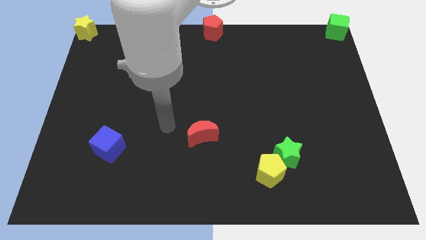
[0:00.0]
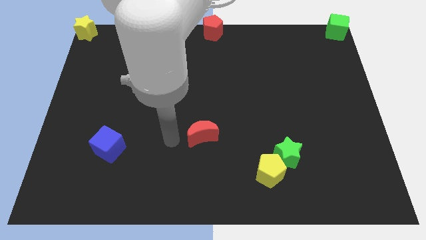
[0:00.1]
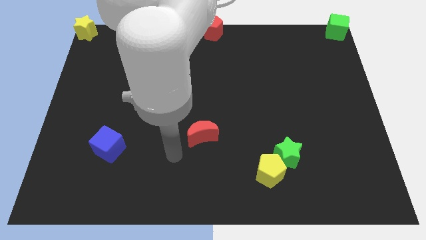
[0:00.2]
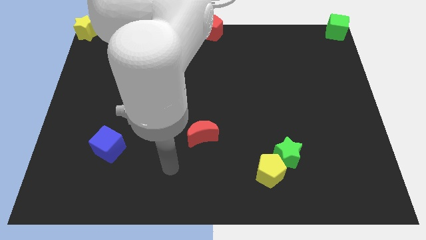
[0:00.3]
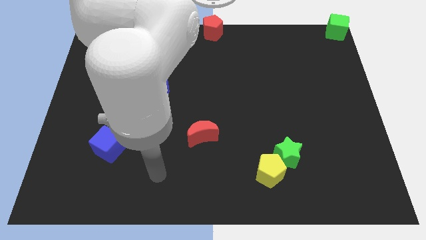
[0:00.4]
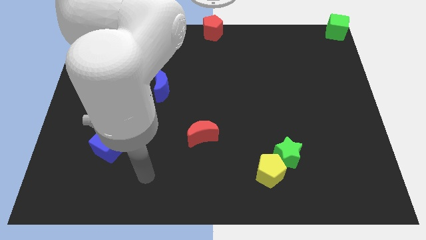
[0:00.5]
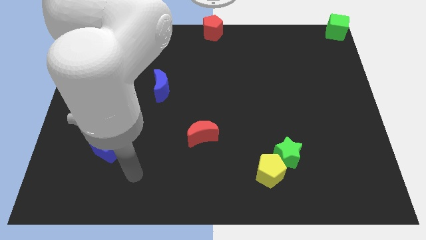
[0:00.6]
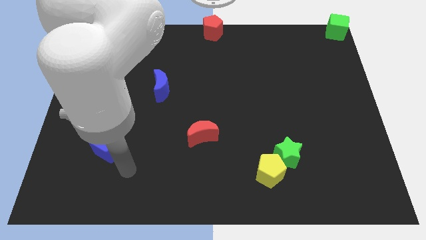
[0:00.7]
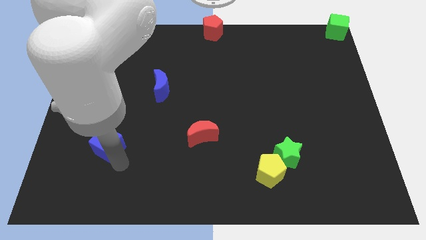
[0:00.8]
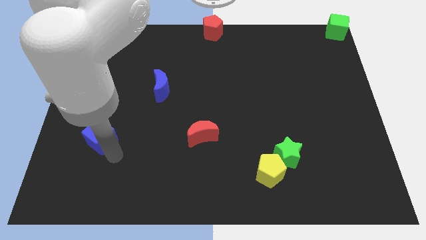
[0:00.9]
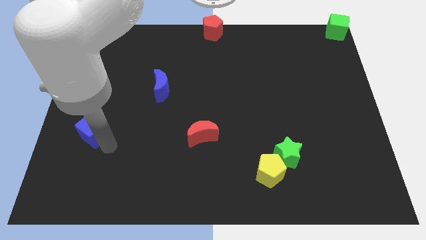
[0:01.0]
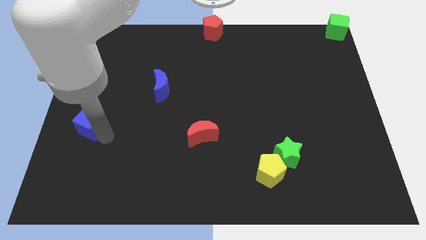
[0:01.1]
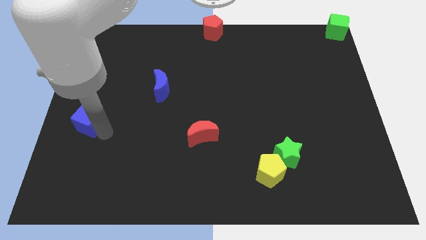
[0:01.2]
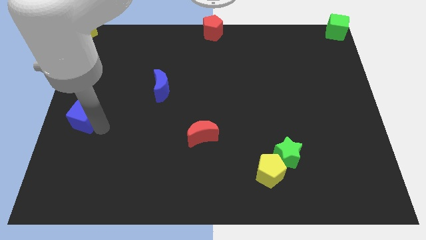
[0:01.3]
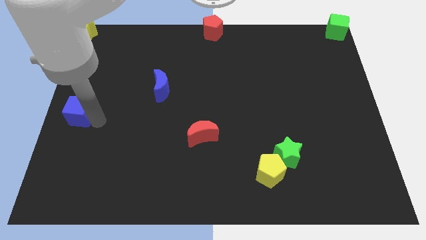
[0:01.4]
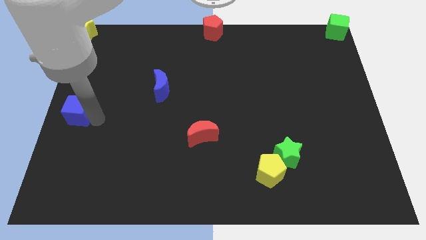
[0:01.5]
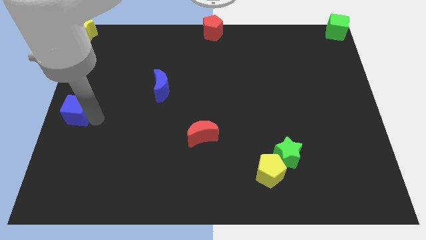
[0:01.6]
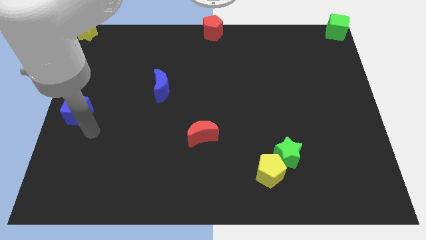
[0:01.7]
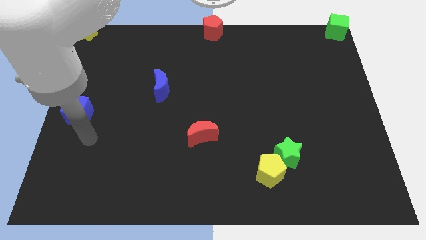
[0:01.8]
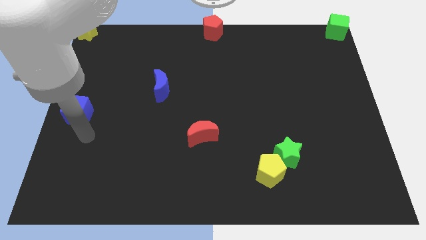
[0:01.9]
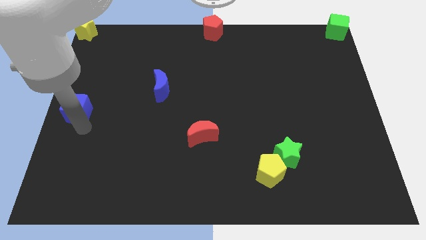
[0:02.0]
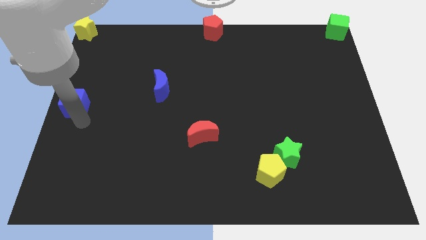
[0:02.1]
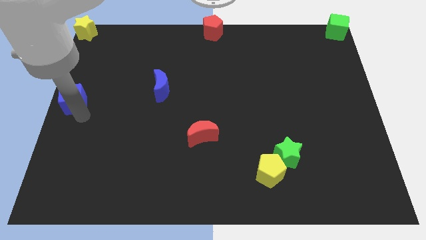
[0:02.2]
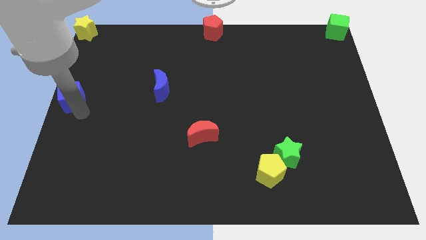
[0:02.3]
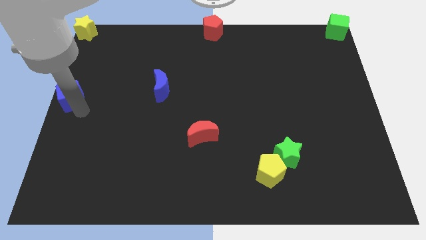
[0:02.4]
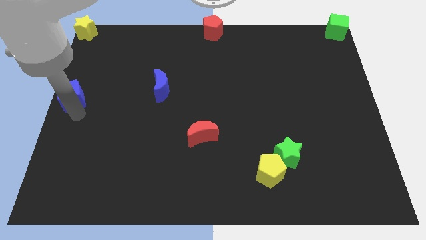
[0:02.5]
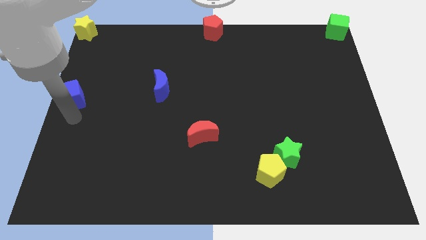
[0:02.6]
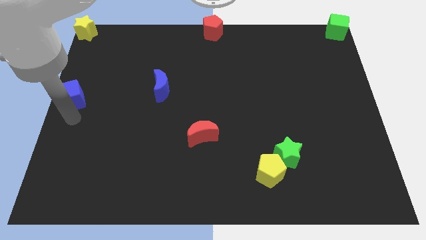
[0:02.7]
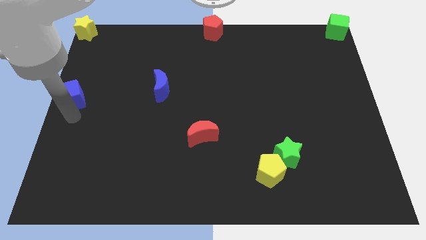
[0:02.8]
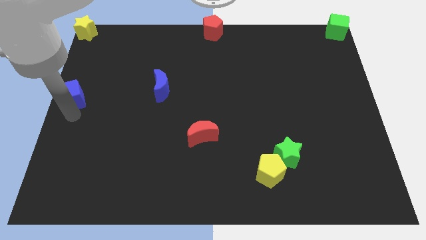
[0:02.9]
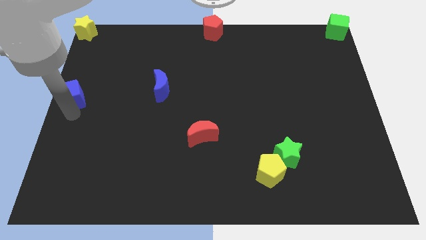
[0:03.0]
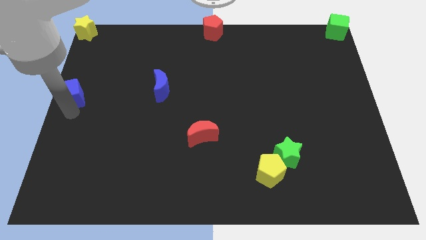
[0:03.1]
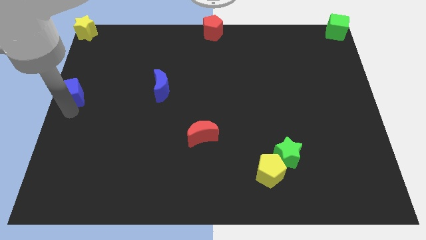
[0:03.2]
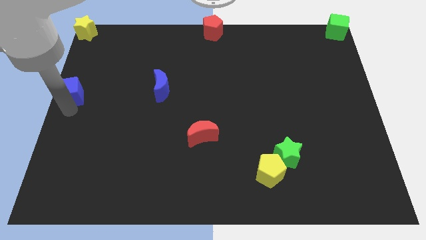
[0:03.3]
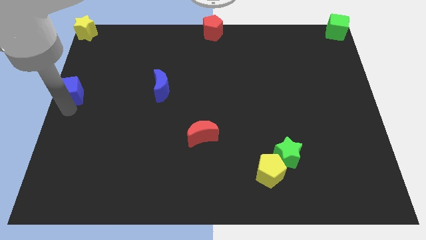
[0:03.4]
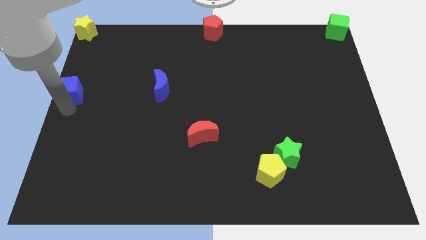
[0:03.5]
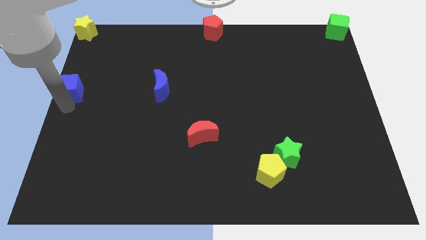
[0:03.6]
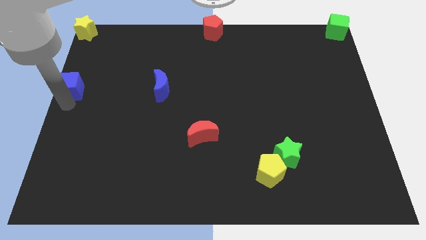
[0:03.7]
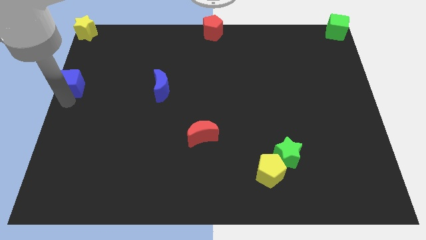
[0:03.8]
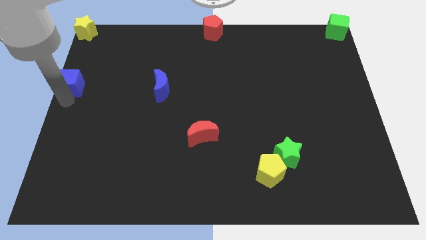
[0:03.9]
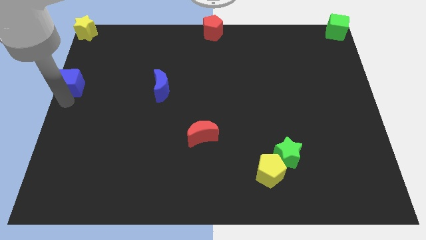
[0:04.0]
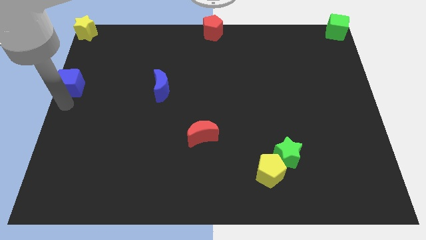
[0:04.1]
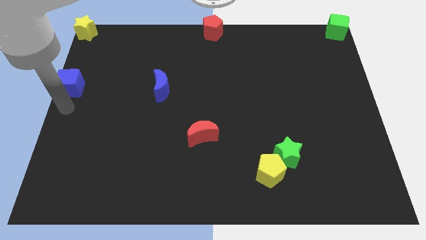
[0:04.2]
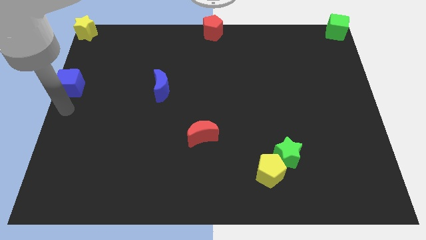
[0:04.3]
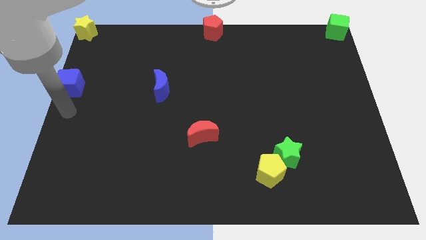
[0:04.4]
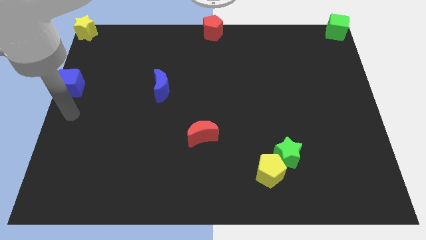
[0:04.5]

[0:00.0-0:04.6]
slide the blue cube to the center left of the board

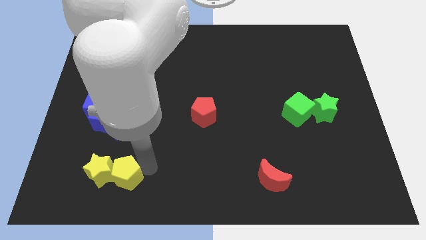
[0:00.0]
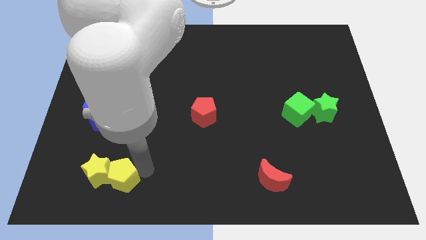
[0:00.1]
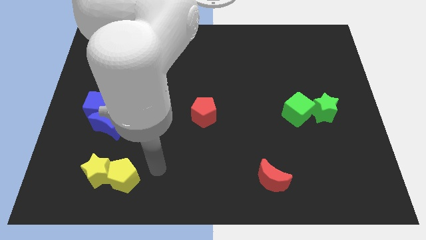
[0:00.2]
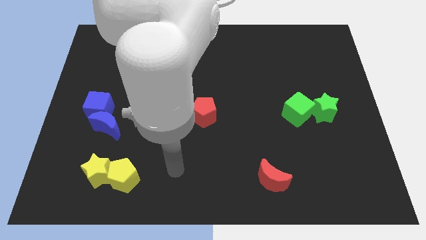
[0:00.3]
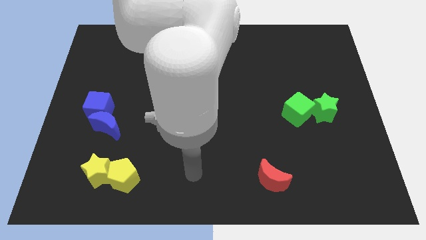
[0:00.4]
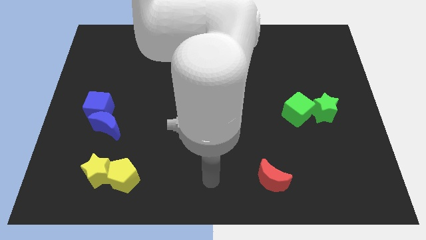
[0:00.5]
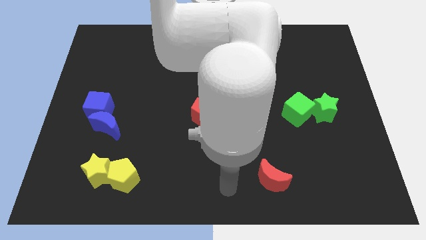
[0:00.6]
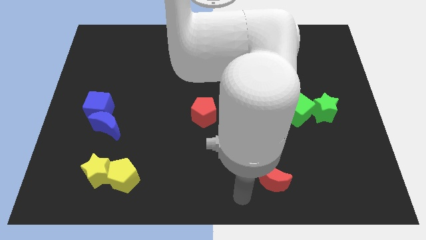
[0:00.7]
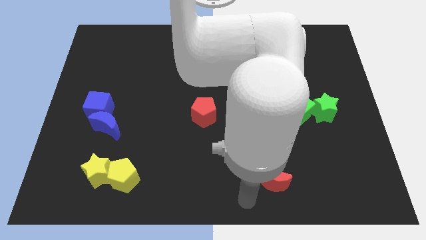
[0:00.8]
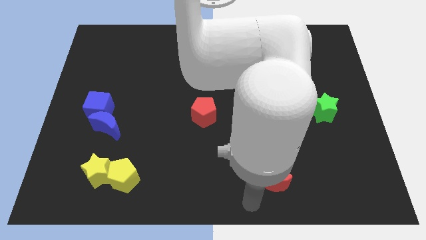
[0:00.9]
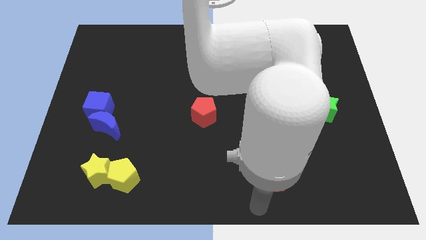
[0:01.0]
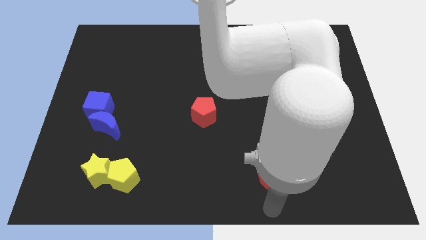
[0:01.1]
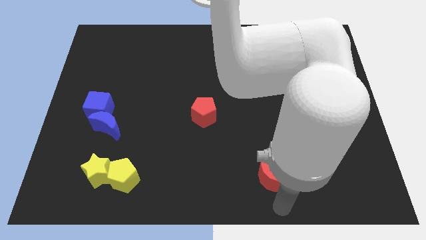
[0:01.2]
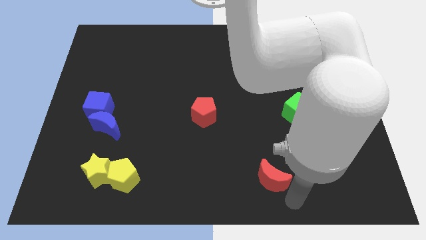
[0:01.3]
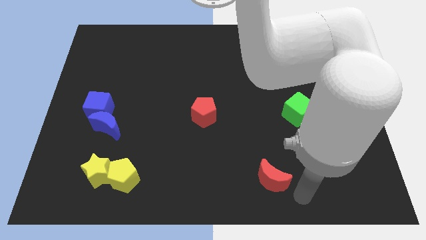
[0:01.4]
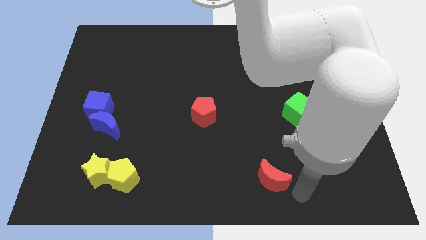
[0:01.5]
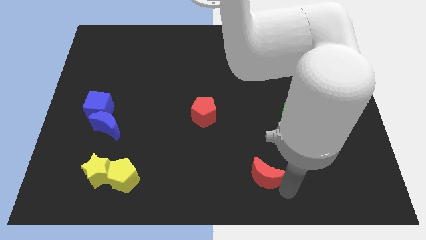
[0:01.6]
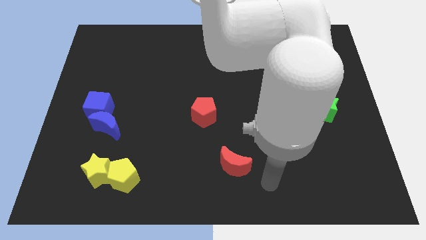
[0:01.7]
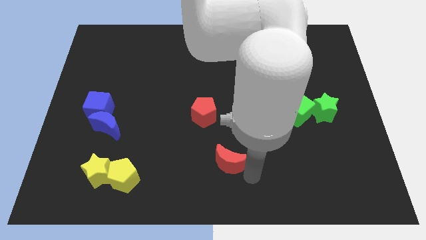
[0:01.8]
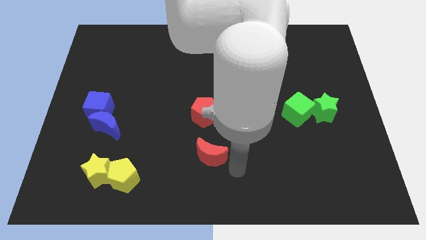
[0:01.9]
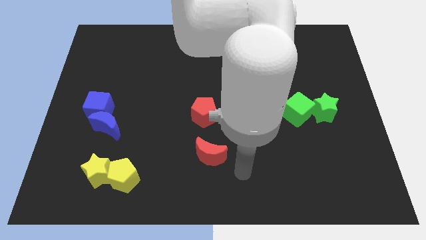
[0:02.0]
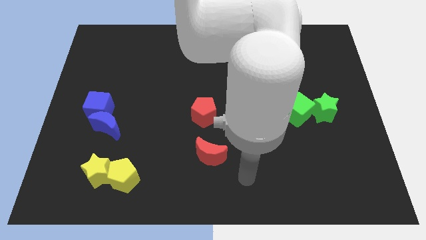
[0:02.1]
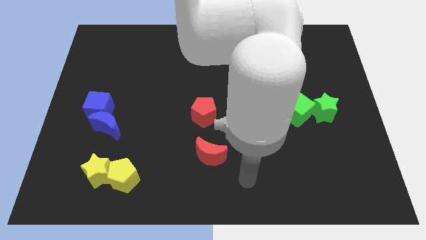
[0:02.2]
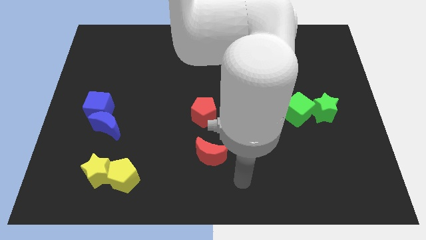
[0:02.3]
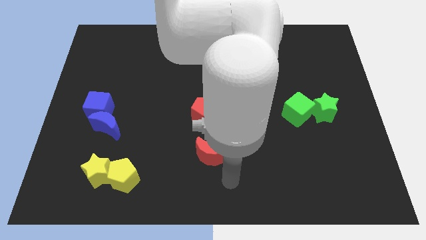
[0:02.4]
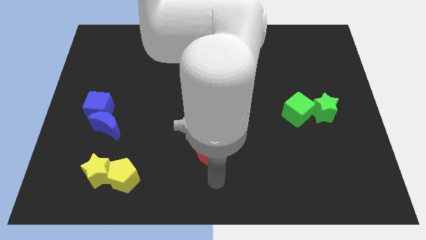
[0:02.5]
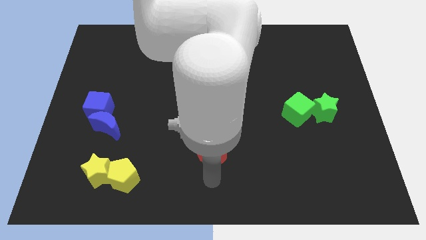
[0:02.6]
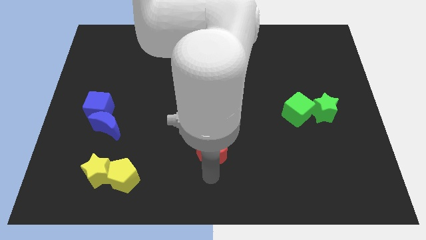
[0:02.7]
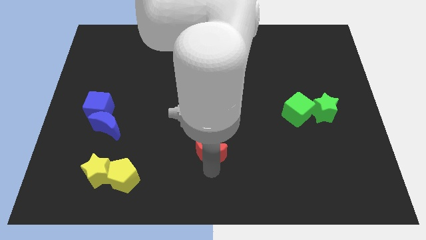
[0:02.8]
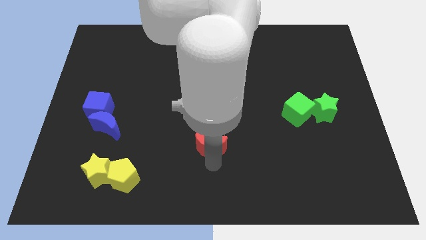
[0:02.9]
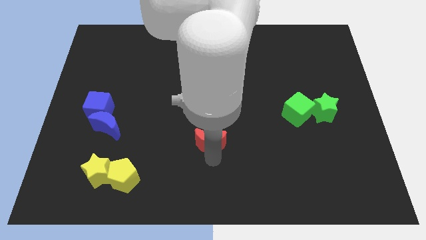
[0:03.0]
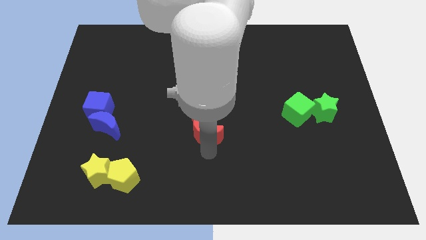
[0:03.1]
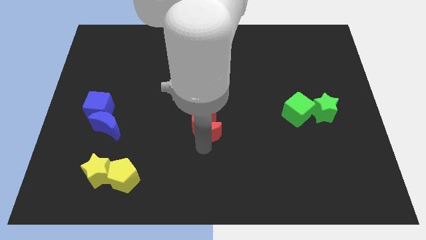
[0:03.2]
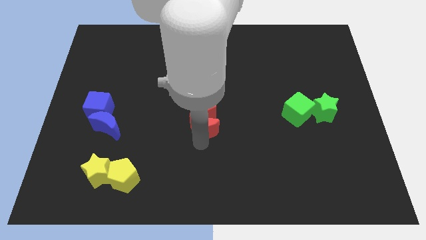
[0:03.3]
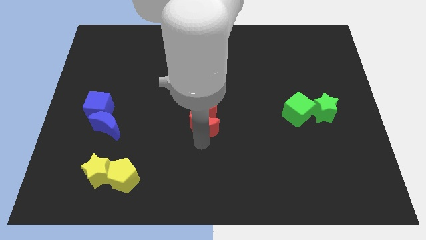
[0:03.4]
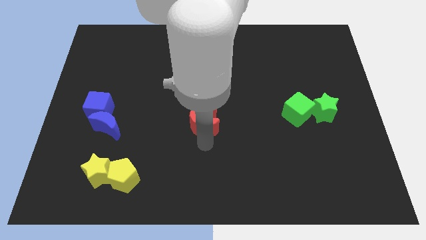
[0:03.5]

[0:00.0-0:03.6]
move the red moon into the bottom side of the red pentagon

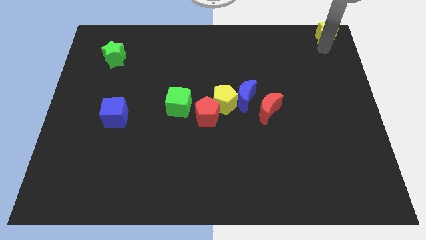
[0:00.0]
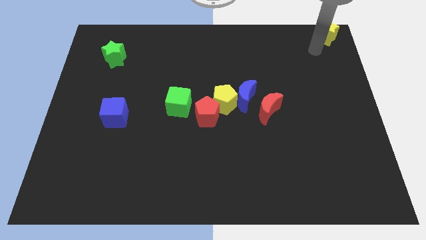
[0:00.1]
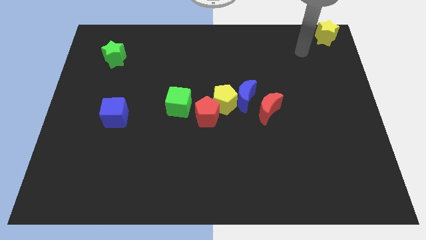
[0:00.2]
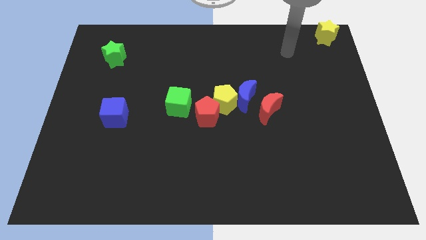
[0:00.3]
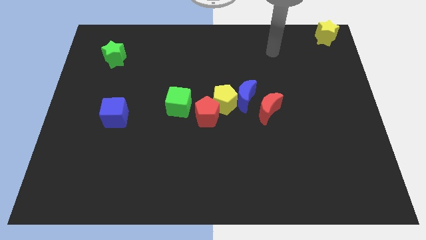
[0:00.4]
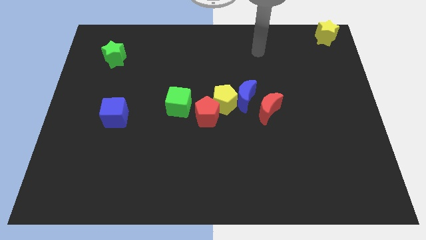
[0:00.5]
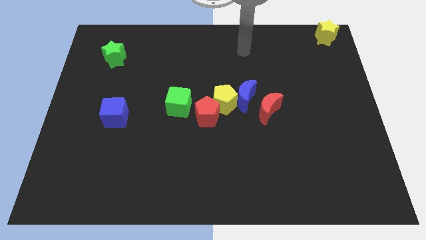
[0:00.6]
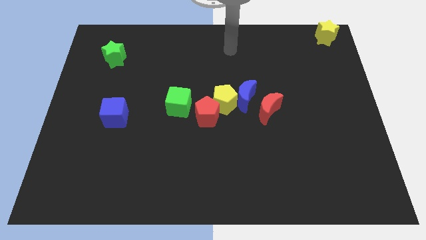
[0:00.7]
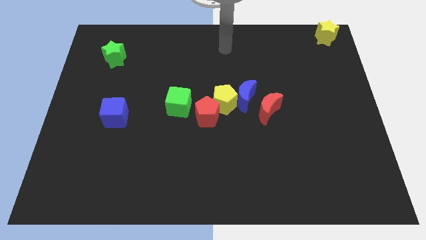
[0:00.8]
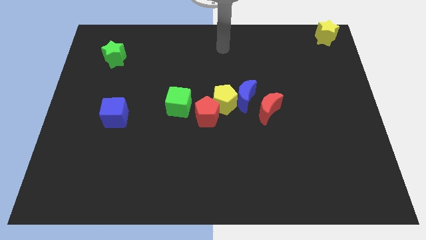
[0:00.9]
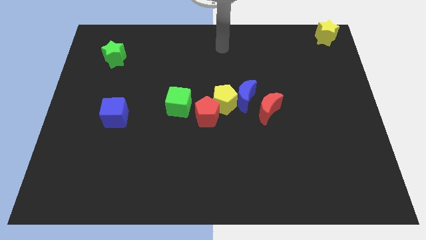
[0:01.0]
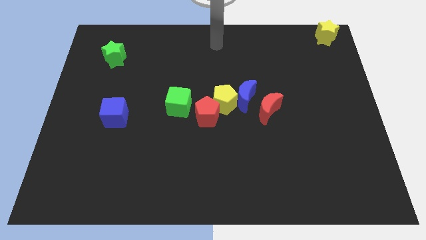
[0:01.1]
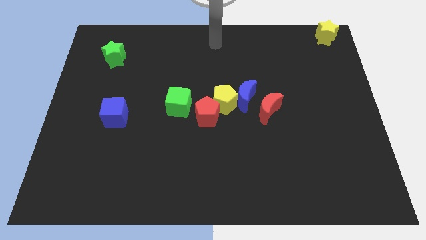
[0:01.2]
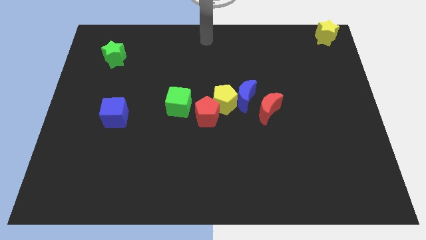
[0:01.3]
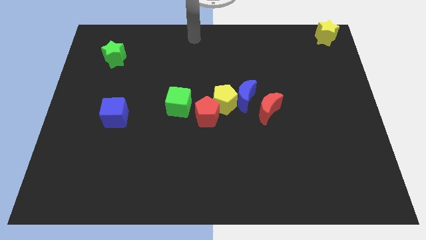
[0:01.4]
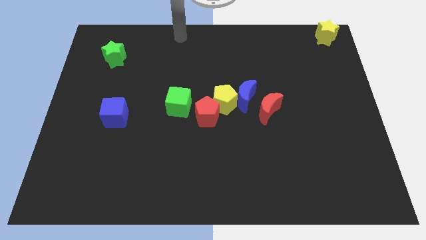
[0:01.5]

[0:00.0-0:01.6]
move your arm away from the yellow star
